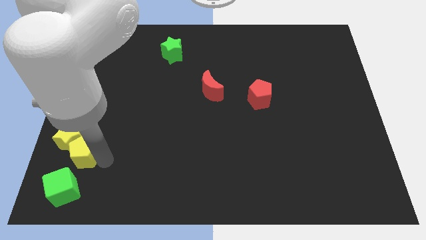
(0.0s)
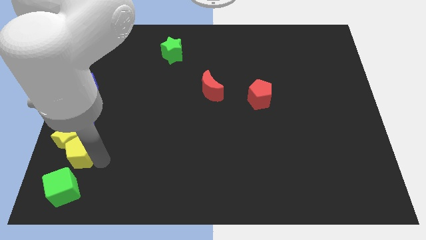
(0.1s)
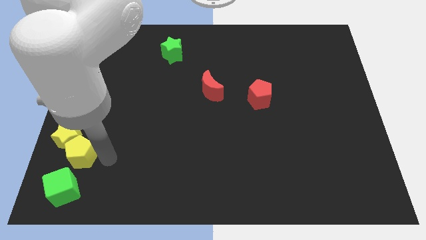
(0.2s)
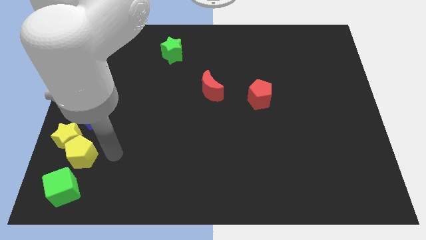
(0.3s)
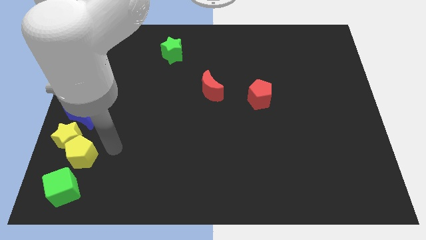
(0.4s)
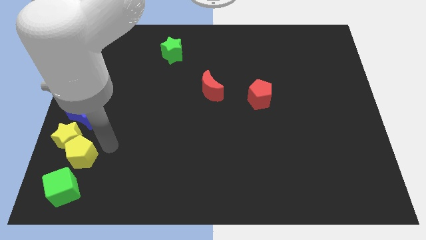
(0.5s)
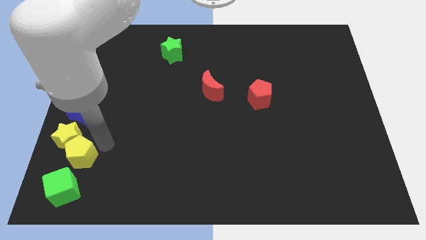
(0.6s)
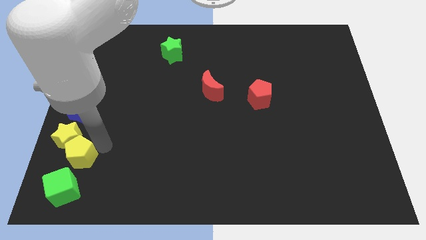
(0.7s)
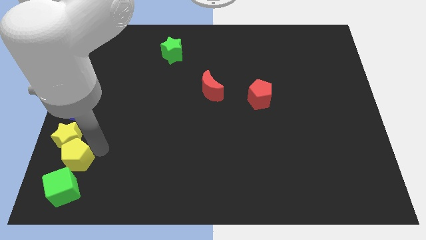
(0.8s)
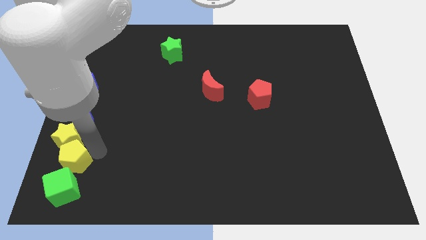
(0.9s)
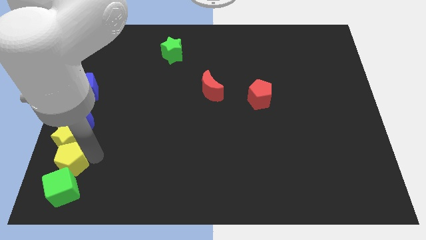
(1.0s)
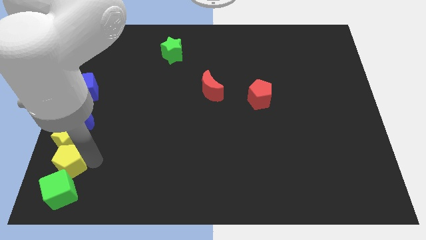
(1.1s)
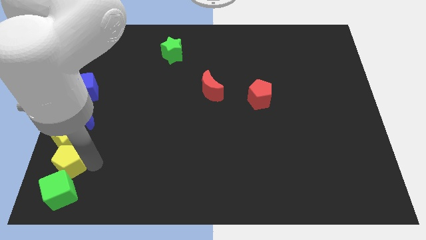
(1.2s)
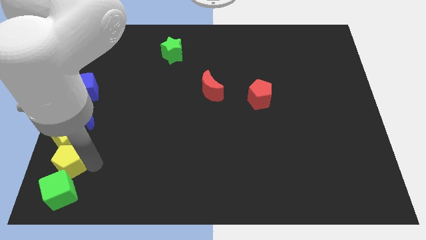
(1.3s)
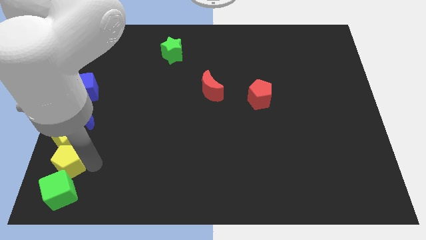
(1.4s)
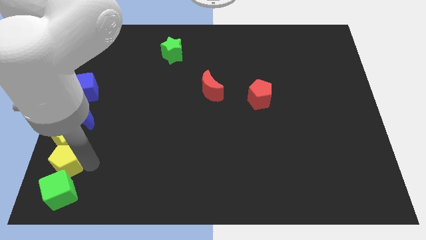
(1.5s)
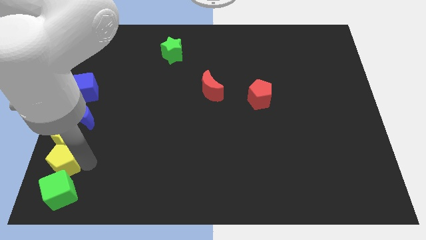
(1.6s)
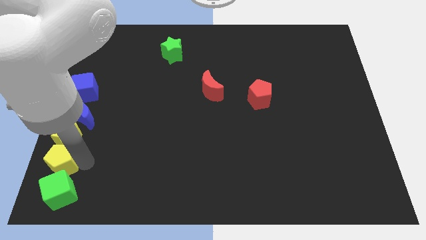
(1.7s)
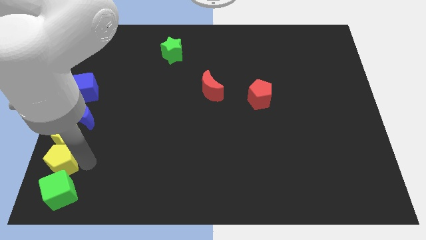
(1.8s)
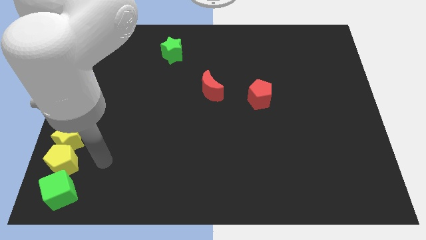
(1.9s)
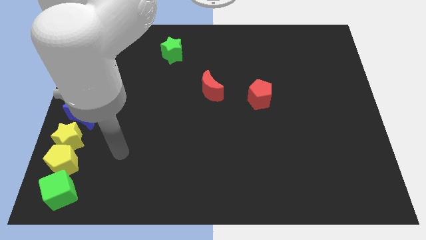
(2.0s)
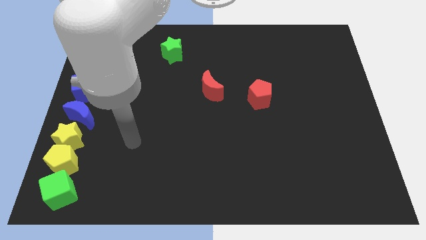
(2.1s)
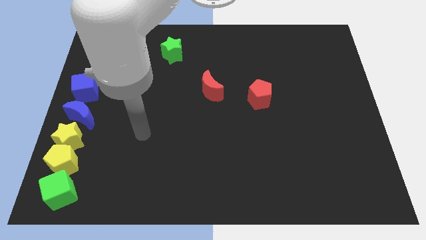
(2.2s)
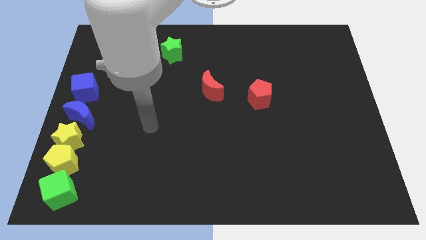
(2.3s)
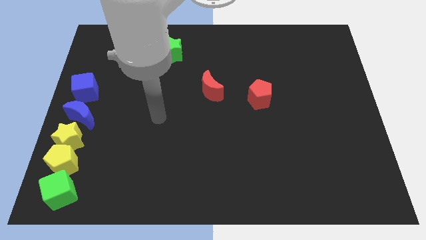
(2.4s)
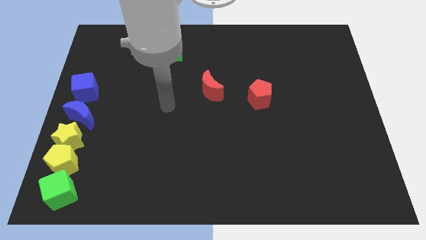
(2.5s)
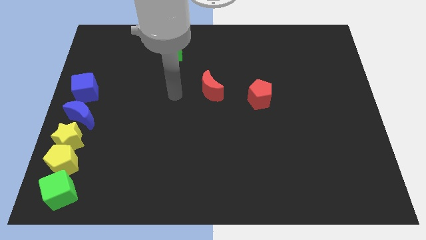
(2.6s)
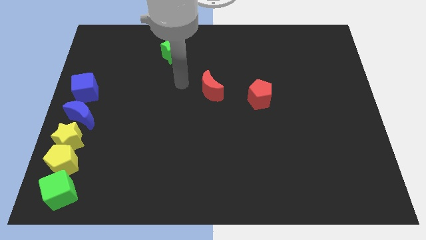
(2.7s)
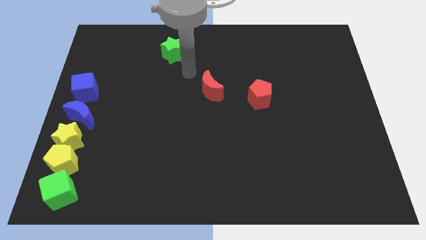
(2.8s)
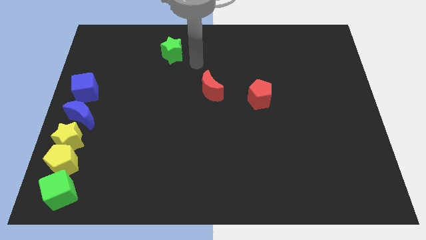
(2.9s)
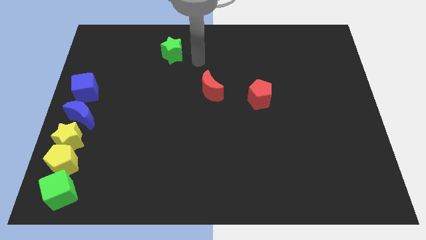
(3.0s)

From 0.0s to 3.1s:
push yellow pentagon in between of green cube yellow star

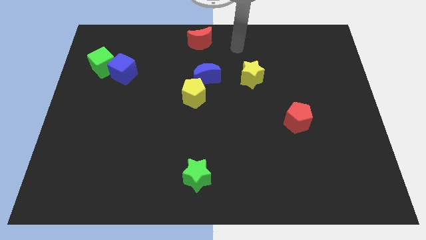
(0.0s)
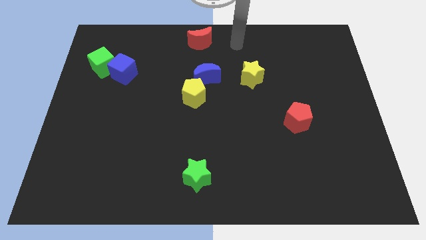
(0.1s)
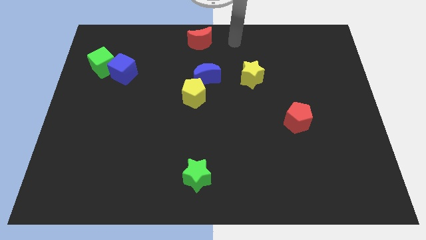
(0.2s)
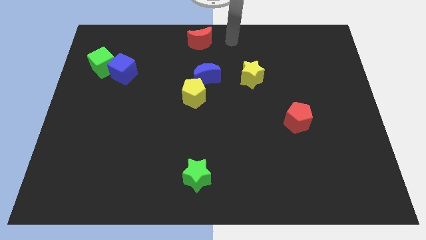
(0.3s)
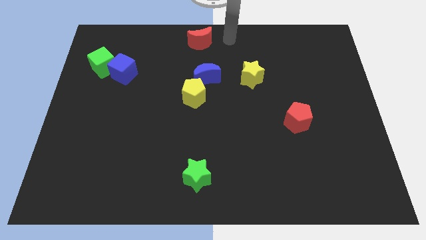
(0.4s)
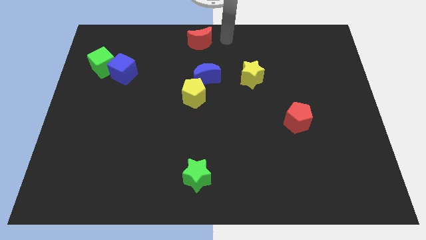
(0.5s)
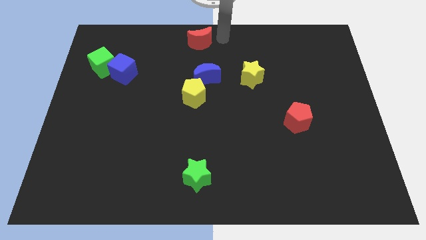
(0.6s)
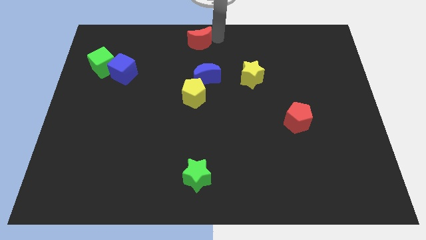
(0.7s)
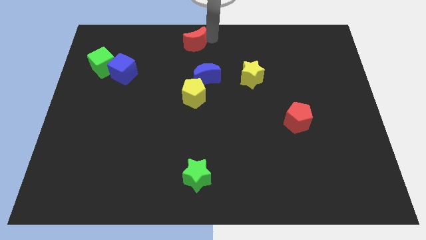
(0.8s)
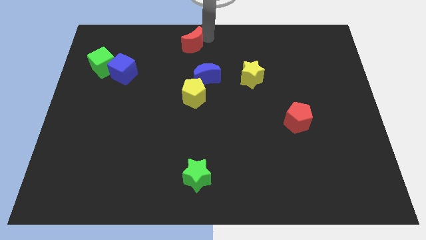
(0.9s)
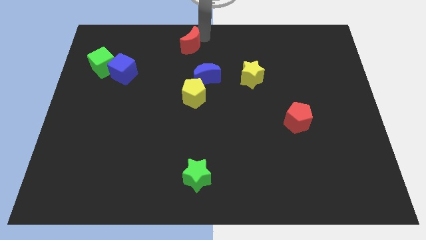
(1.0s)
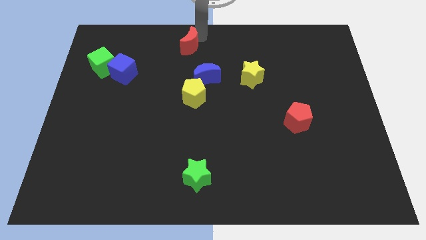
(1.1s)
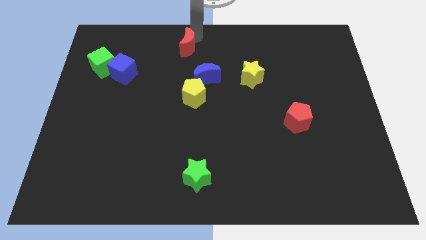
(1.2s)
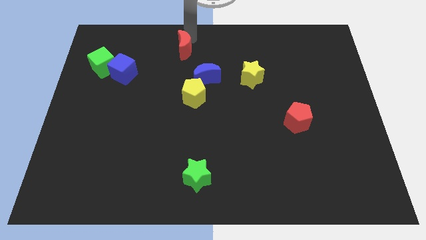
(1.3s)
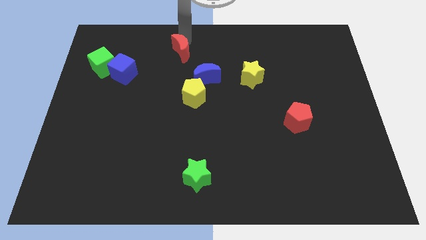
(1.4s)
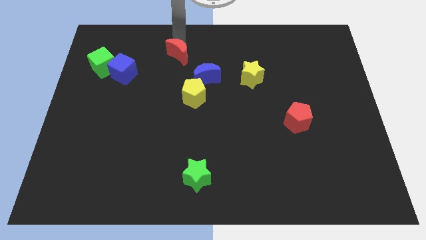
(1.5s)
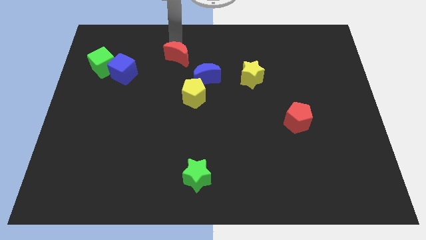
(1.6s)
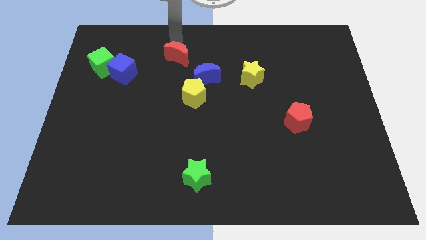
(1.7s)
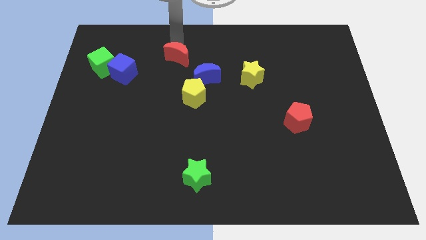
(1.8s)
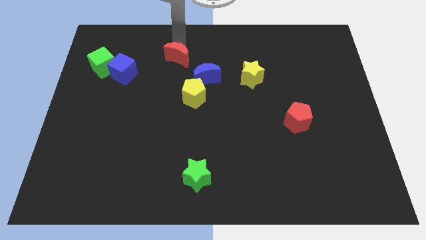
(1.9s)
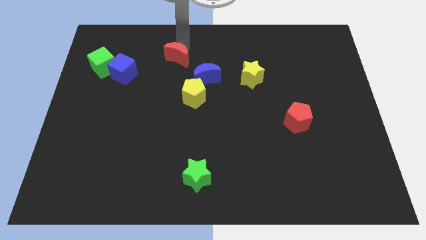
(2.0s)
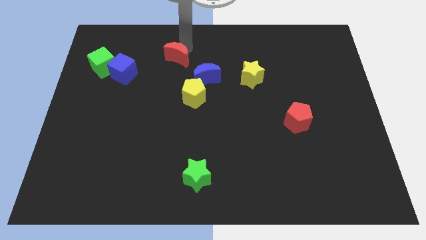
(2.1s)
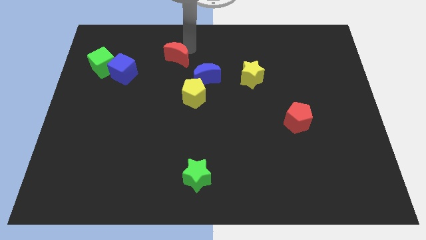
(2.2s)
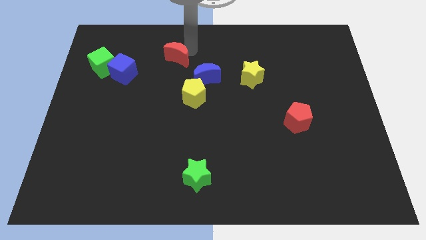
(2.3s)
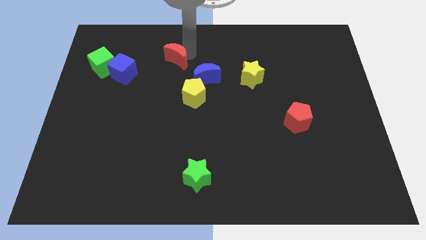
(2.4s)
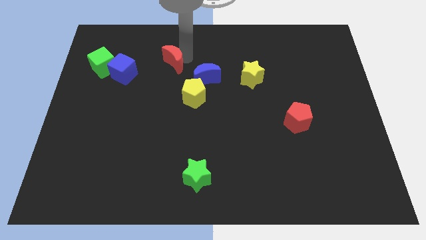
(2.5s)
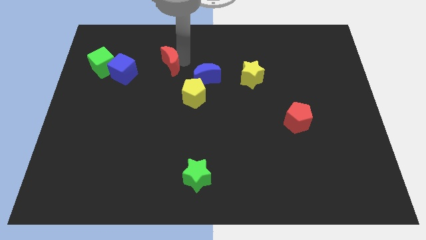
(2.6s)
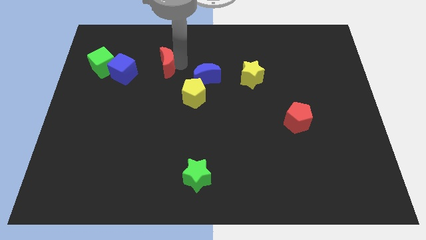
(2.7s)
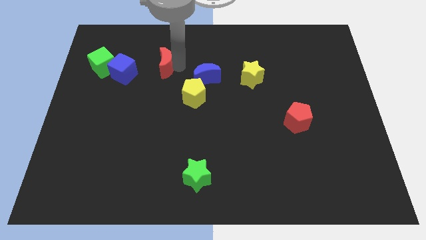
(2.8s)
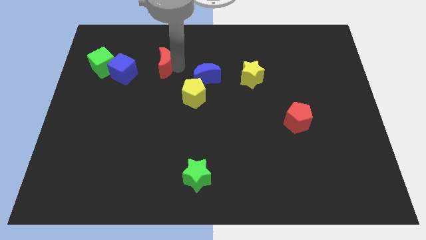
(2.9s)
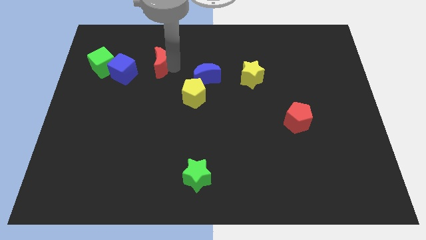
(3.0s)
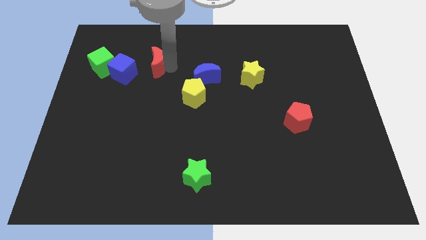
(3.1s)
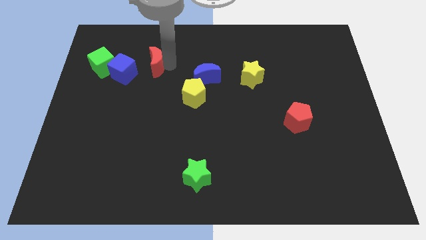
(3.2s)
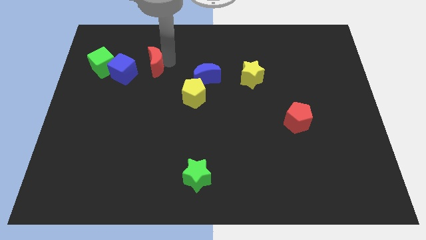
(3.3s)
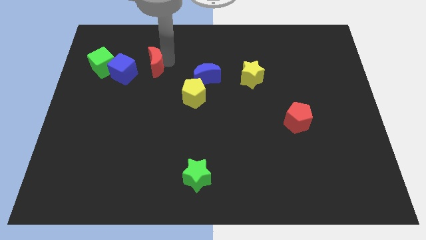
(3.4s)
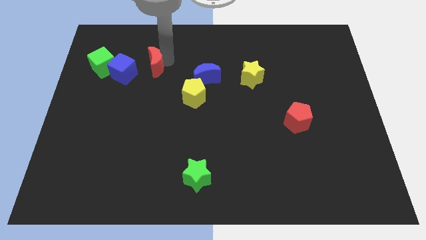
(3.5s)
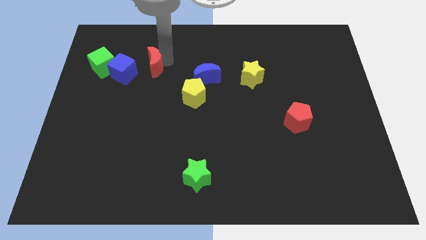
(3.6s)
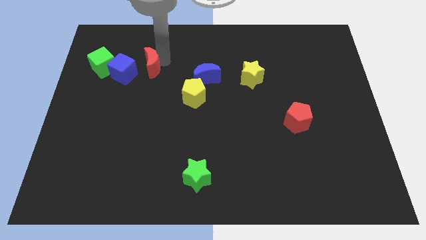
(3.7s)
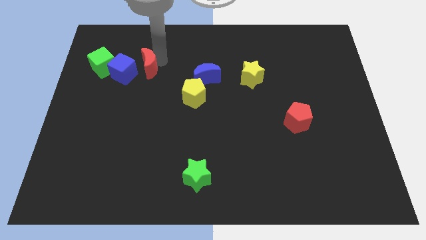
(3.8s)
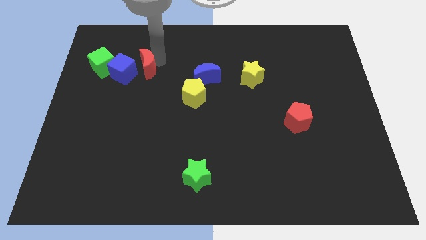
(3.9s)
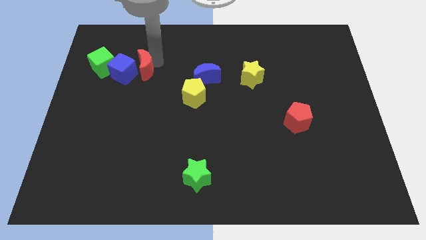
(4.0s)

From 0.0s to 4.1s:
place the red moon to the right side of the blue cube

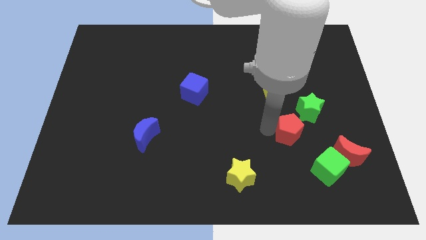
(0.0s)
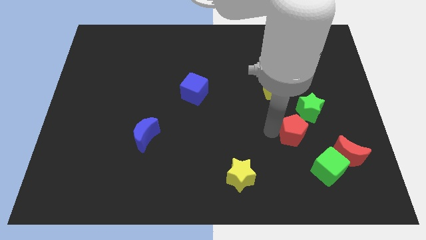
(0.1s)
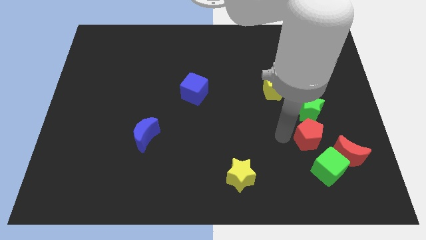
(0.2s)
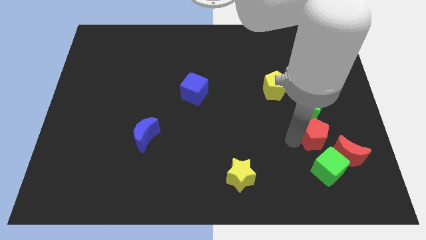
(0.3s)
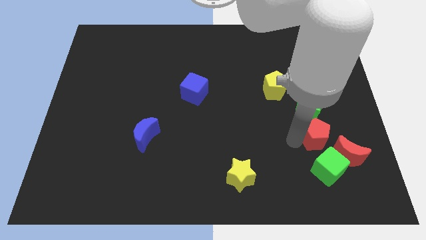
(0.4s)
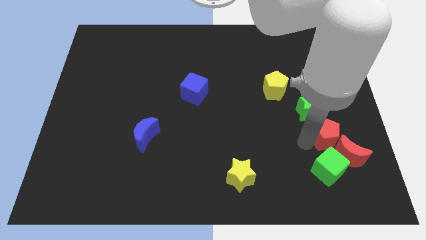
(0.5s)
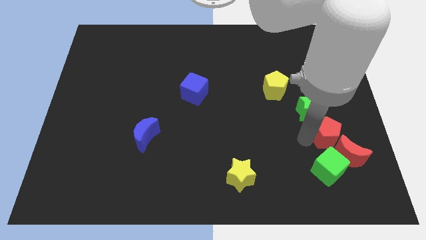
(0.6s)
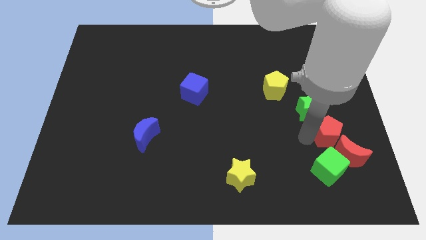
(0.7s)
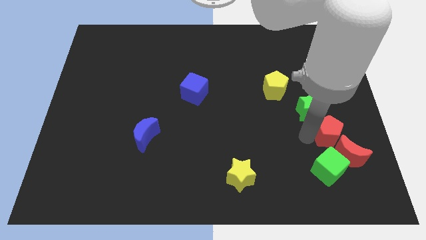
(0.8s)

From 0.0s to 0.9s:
place the red pentagon in between the green star and red moon

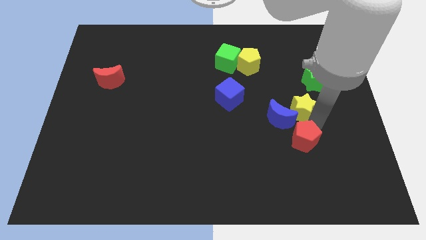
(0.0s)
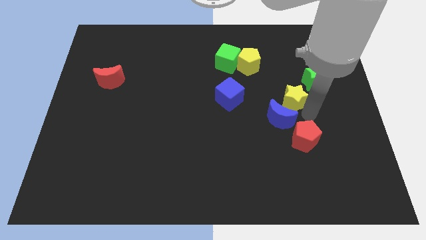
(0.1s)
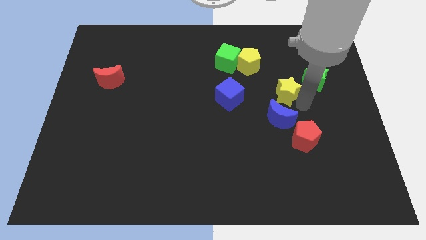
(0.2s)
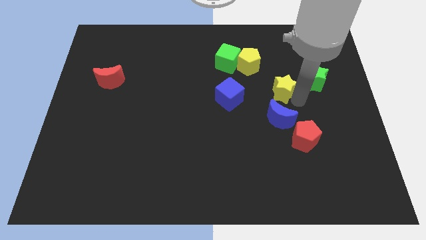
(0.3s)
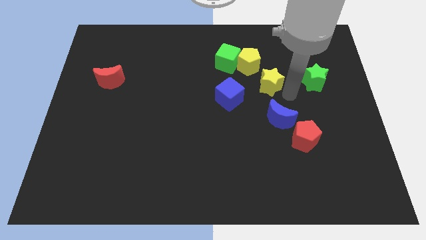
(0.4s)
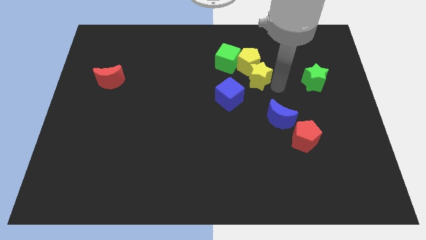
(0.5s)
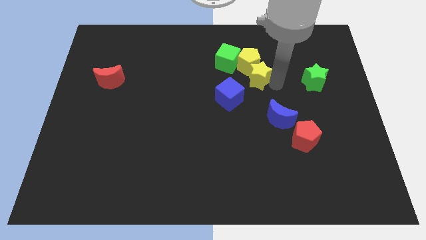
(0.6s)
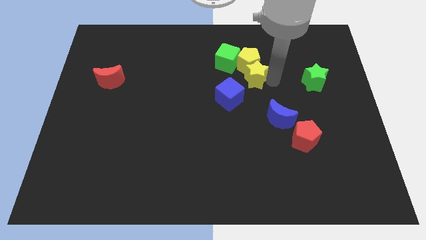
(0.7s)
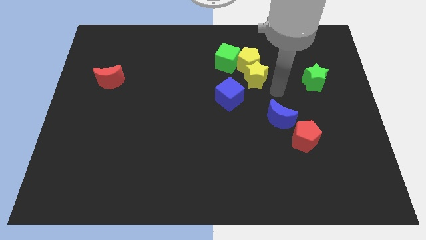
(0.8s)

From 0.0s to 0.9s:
move the yellow star into the bottom side of he yellow pentagon
